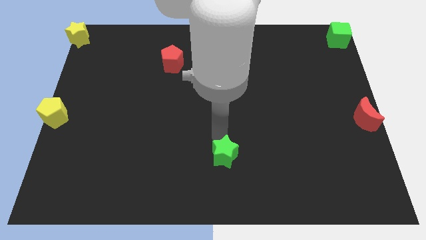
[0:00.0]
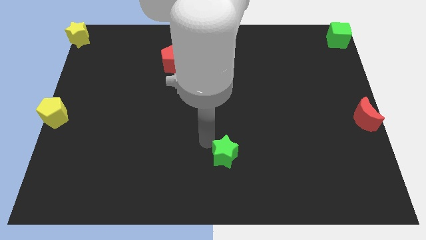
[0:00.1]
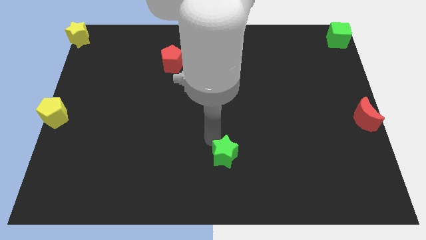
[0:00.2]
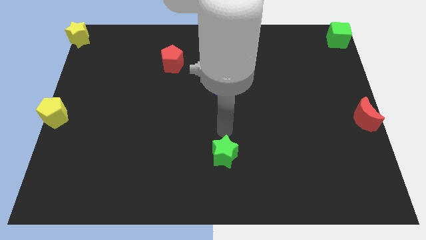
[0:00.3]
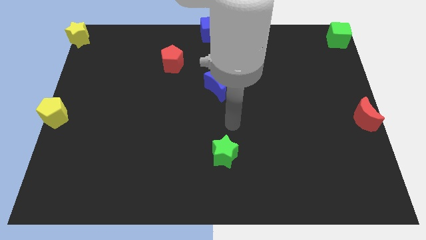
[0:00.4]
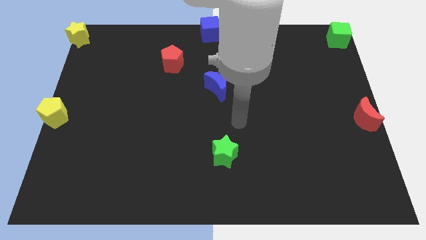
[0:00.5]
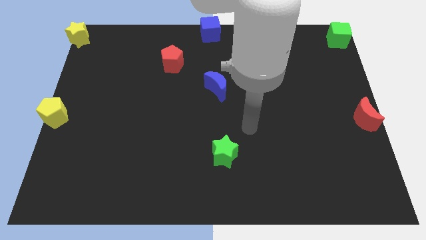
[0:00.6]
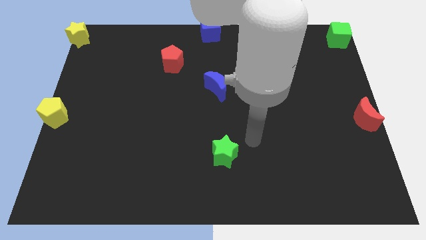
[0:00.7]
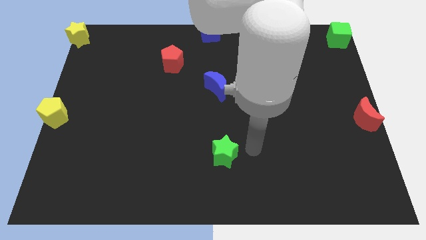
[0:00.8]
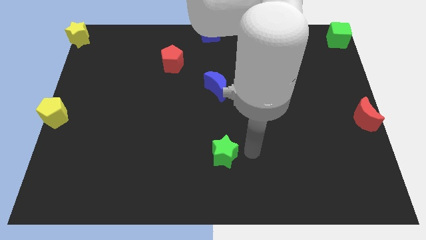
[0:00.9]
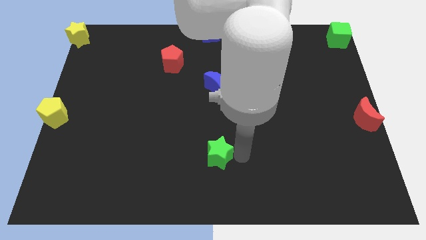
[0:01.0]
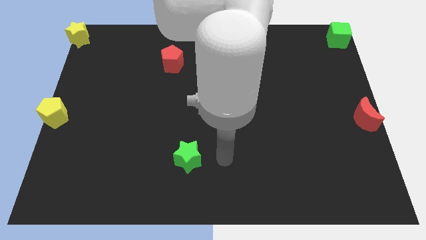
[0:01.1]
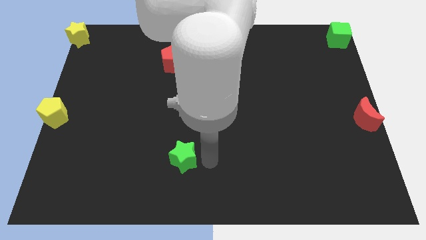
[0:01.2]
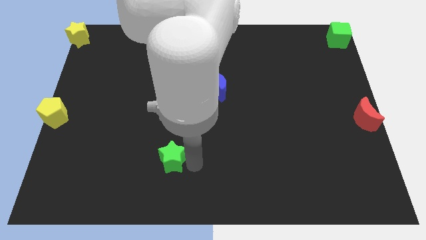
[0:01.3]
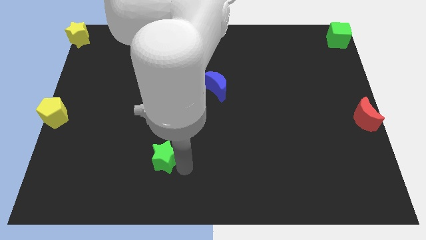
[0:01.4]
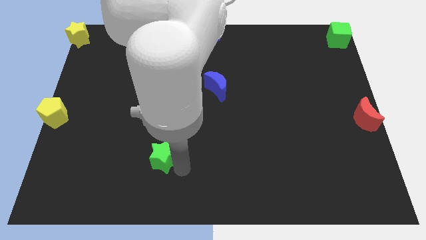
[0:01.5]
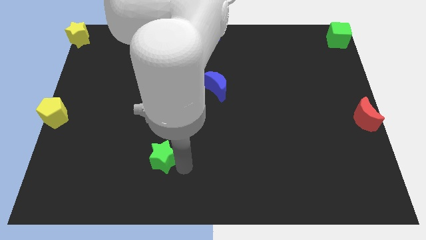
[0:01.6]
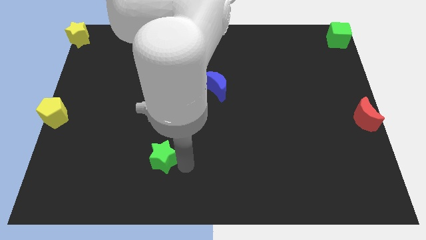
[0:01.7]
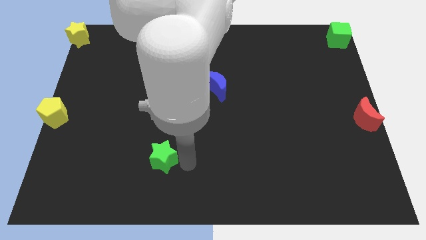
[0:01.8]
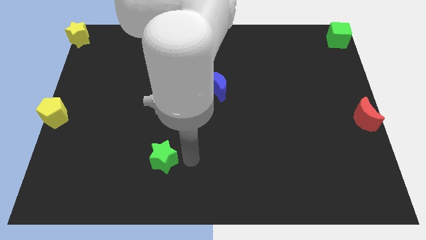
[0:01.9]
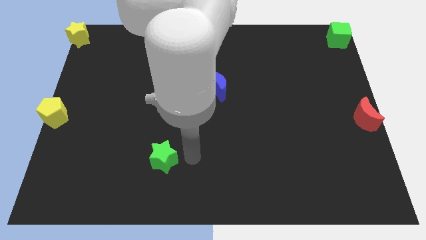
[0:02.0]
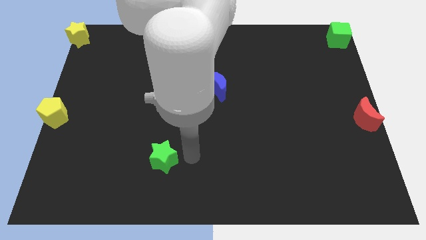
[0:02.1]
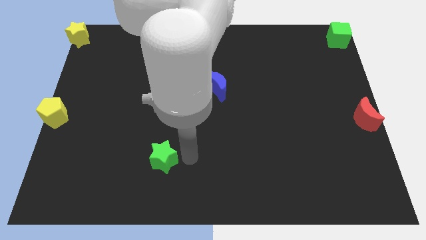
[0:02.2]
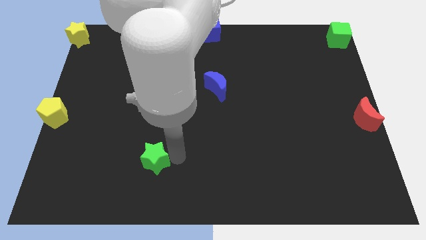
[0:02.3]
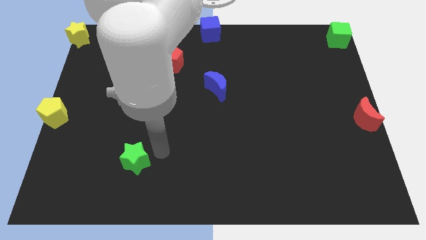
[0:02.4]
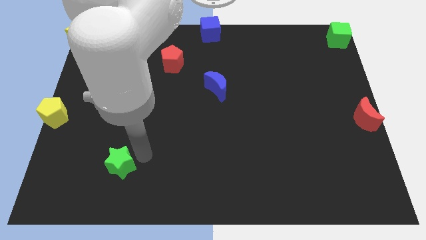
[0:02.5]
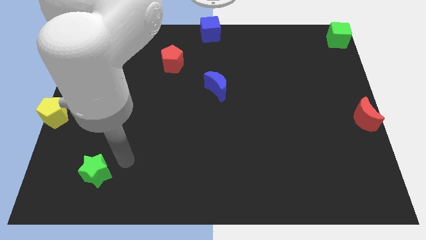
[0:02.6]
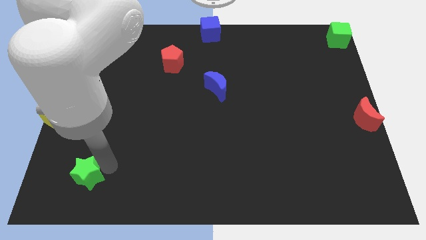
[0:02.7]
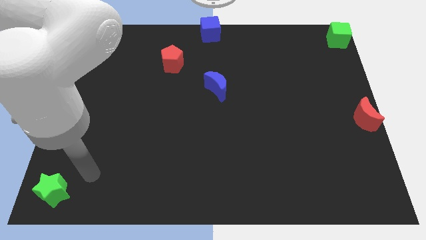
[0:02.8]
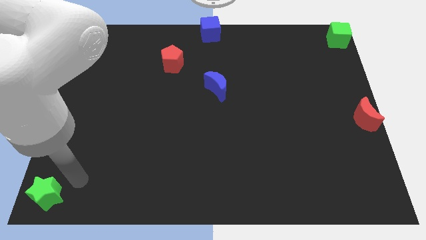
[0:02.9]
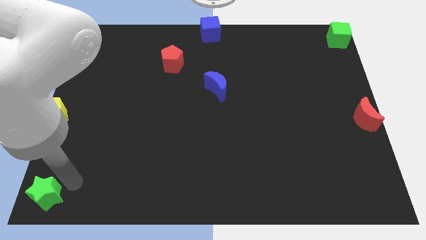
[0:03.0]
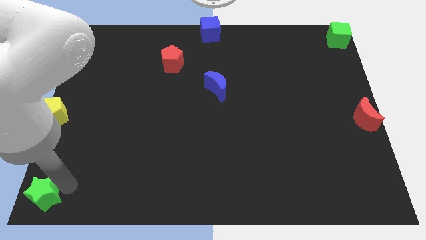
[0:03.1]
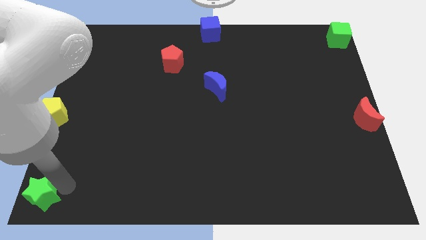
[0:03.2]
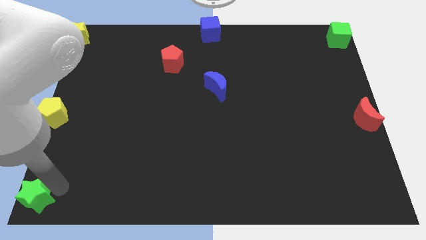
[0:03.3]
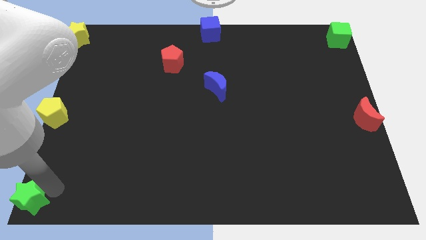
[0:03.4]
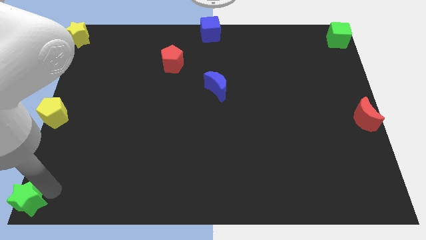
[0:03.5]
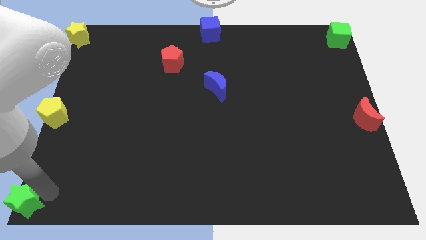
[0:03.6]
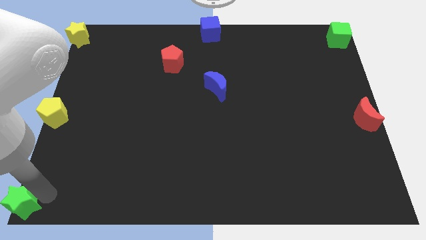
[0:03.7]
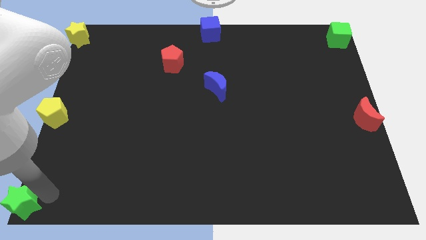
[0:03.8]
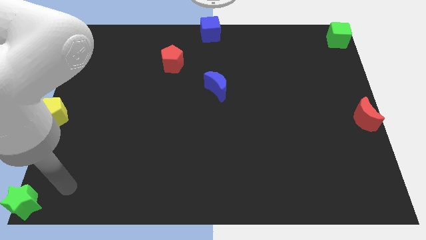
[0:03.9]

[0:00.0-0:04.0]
move the green star to the bottom left corner

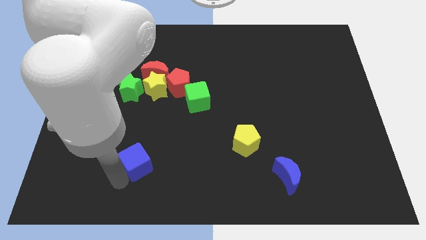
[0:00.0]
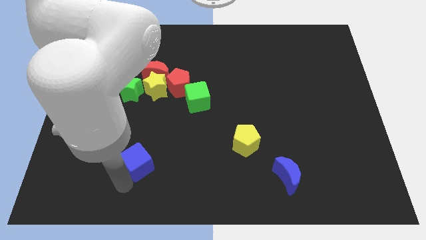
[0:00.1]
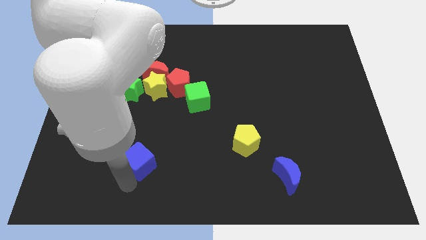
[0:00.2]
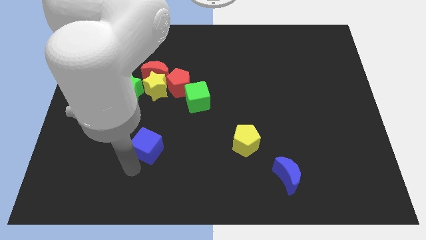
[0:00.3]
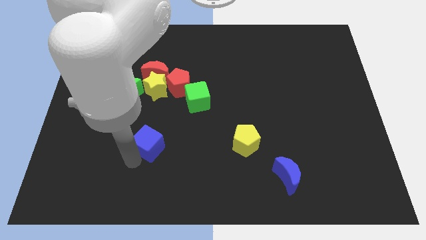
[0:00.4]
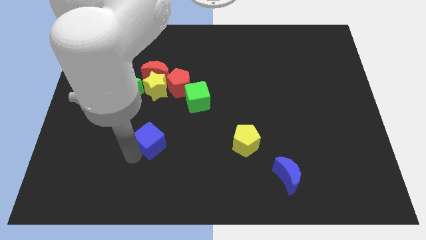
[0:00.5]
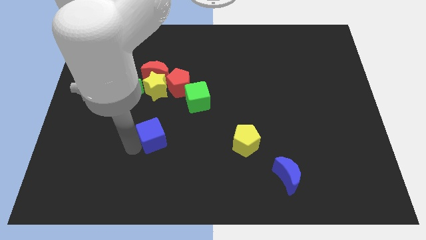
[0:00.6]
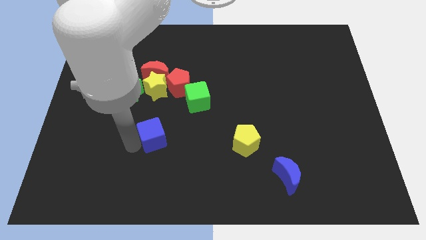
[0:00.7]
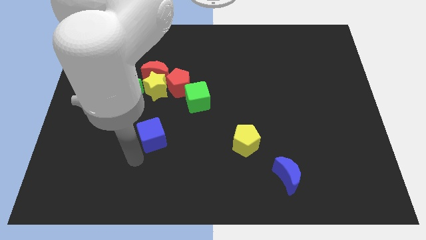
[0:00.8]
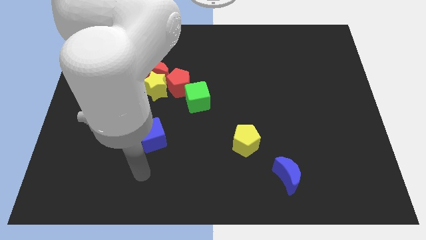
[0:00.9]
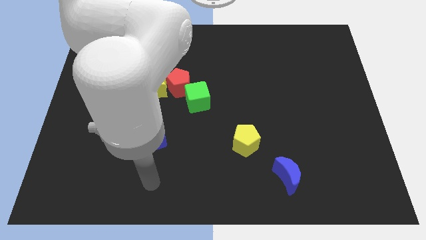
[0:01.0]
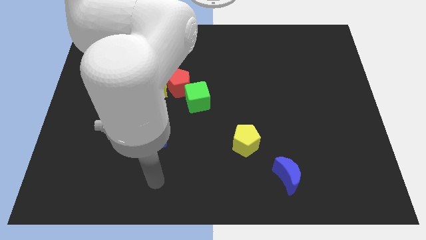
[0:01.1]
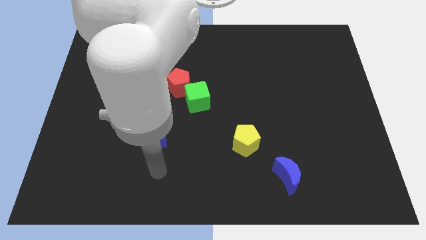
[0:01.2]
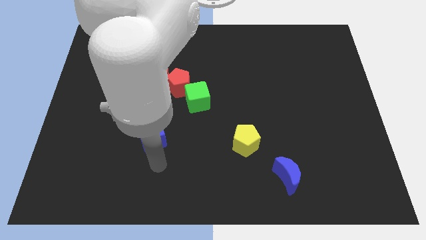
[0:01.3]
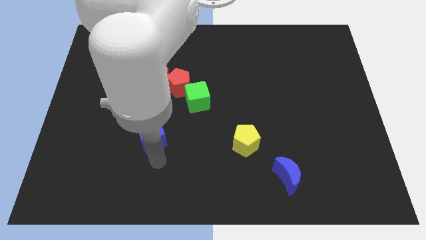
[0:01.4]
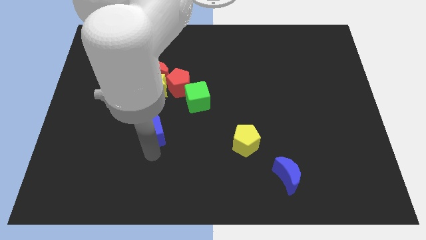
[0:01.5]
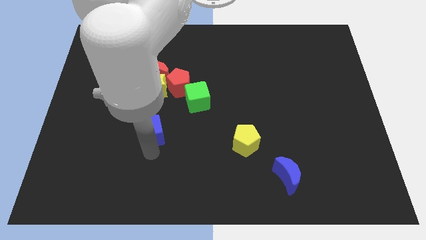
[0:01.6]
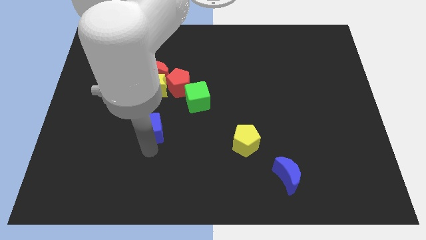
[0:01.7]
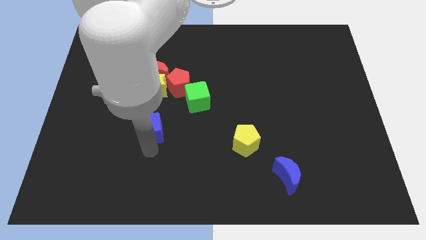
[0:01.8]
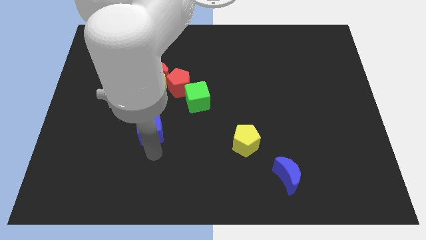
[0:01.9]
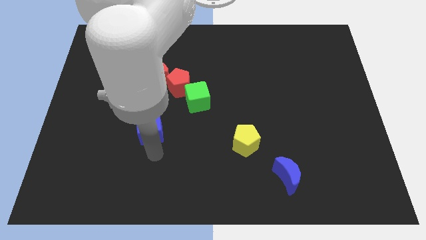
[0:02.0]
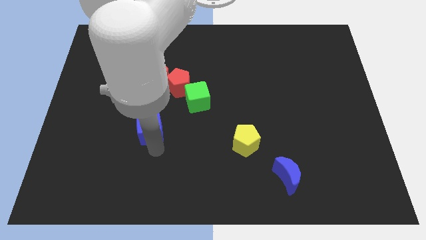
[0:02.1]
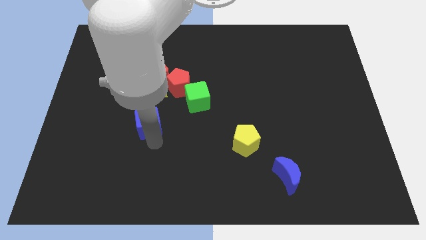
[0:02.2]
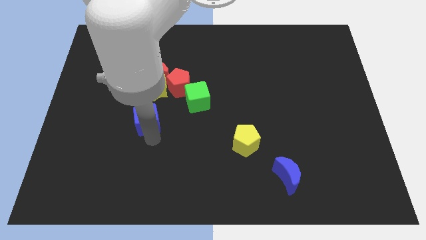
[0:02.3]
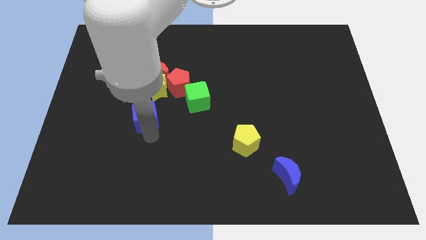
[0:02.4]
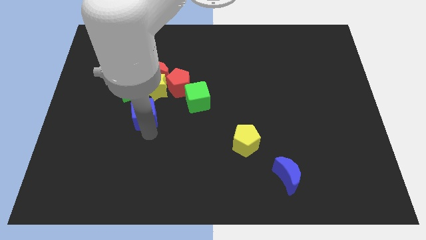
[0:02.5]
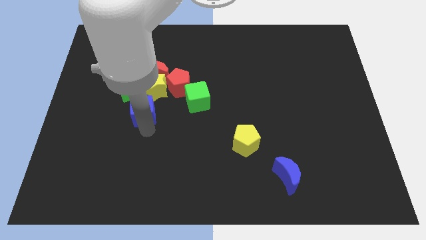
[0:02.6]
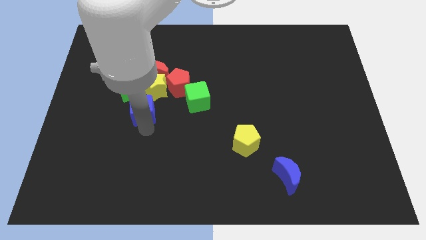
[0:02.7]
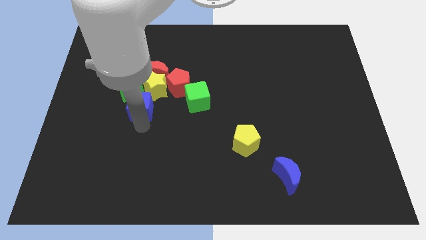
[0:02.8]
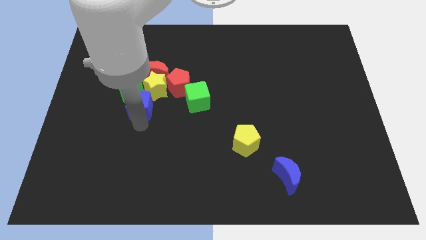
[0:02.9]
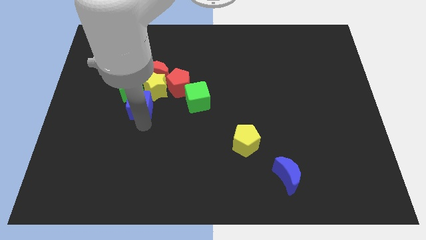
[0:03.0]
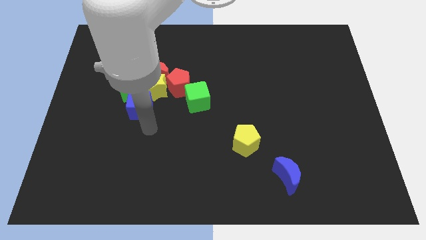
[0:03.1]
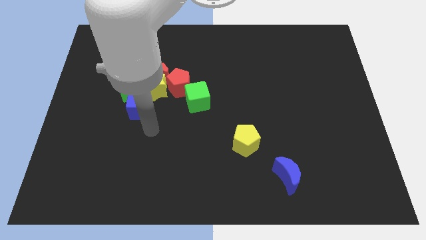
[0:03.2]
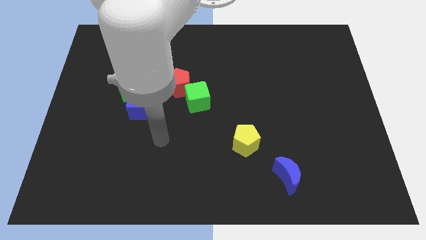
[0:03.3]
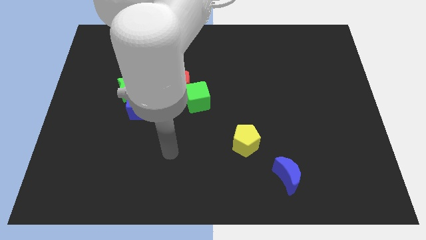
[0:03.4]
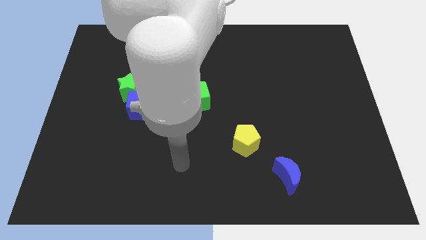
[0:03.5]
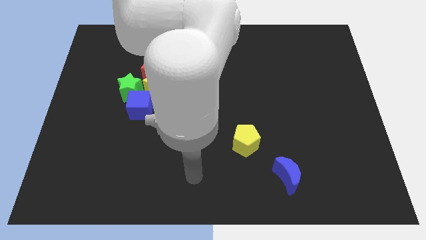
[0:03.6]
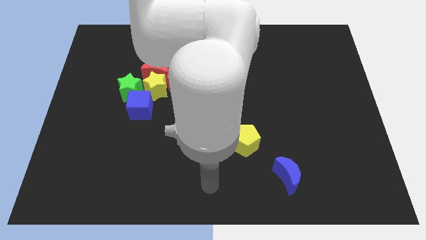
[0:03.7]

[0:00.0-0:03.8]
move the blue cube into the group of blocks

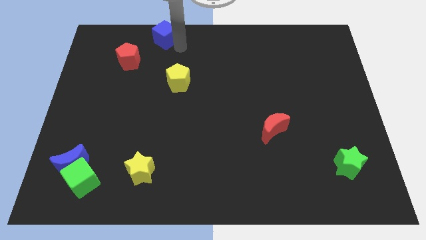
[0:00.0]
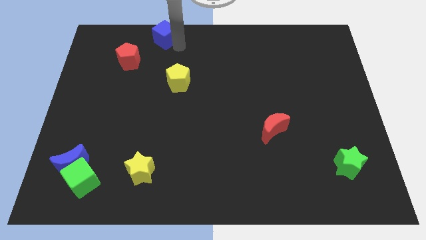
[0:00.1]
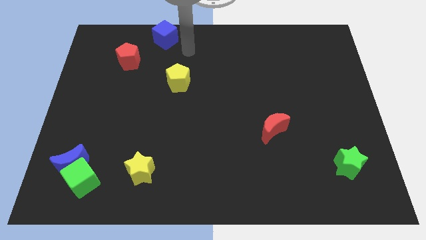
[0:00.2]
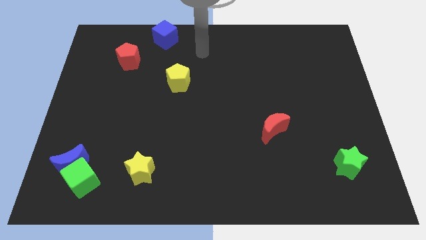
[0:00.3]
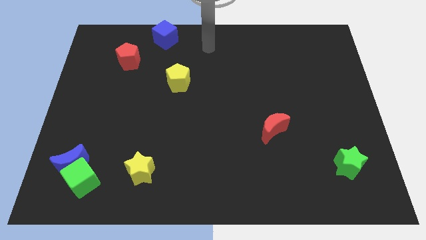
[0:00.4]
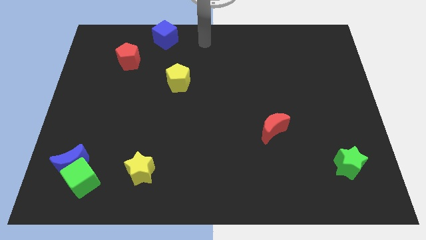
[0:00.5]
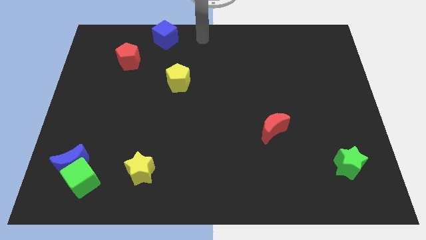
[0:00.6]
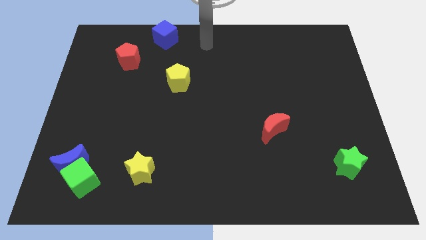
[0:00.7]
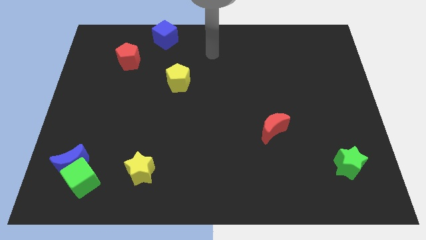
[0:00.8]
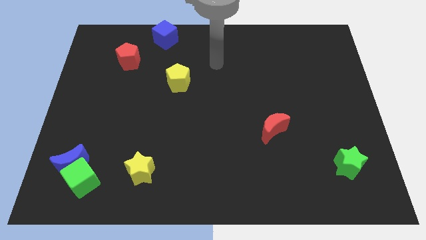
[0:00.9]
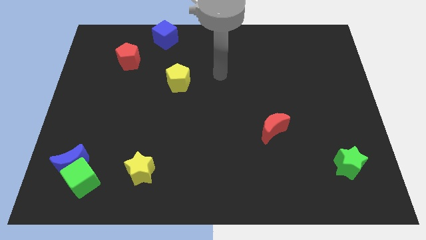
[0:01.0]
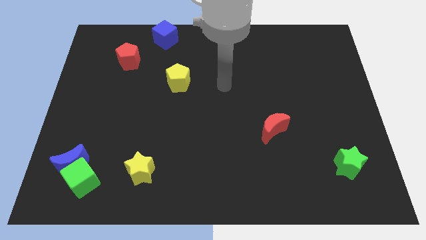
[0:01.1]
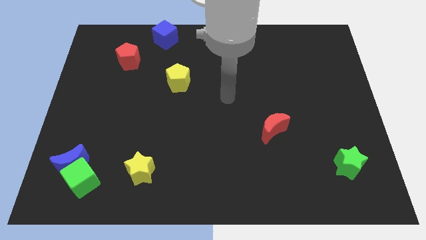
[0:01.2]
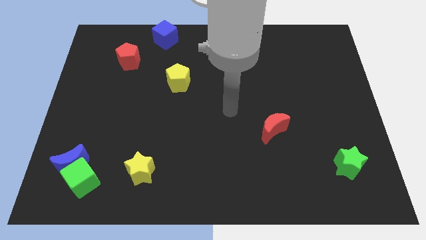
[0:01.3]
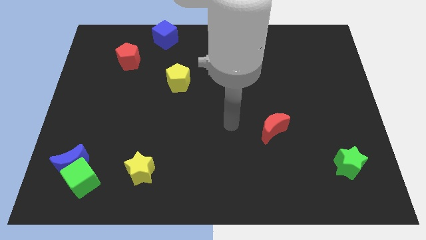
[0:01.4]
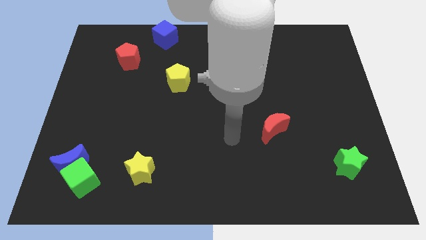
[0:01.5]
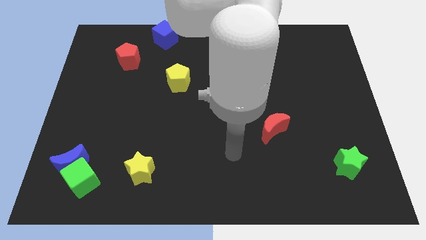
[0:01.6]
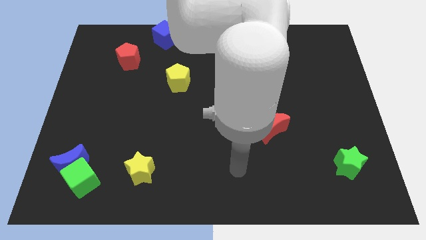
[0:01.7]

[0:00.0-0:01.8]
move your arm away from the blue cube
